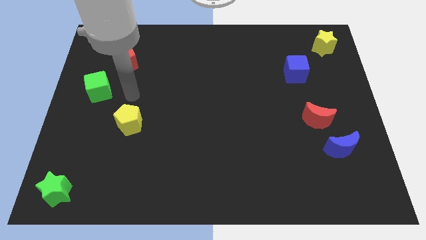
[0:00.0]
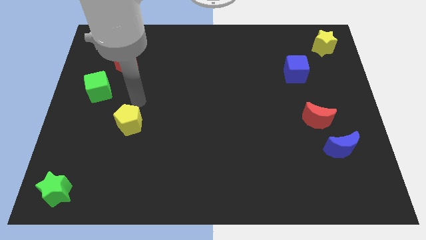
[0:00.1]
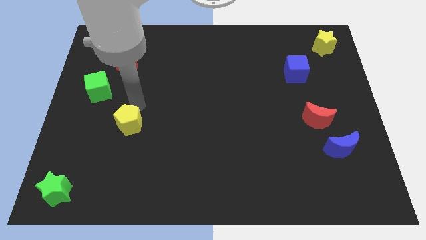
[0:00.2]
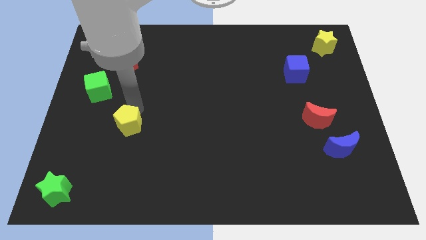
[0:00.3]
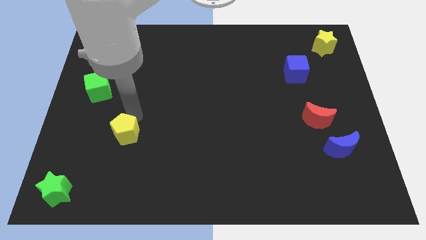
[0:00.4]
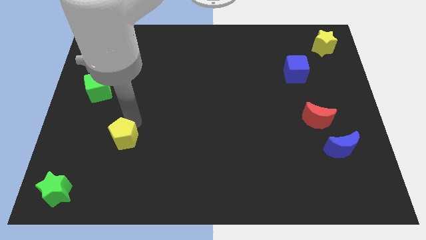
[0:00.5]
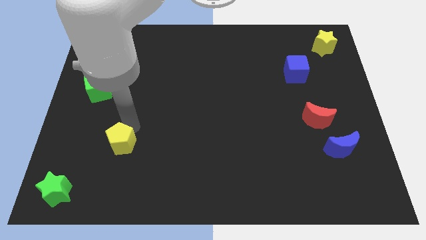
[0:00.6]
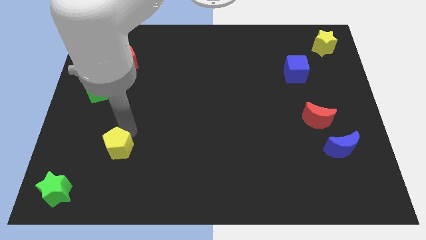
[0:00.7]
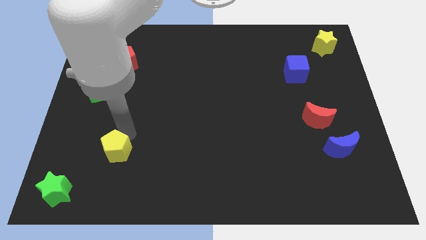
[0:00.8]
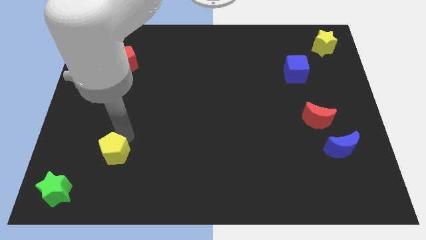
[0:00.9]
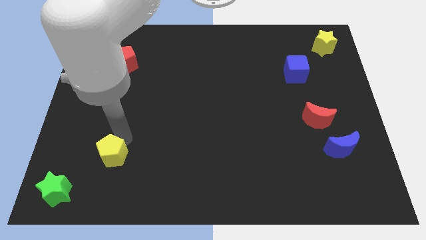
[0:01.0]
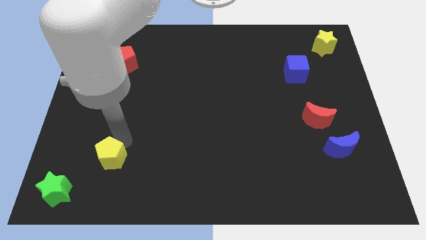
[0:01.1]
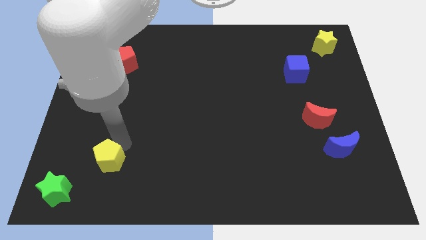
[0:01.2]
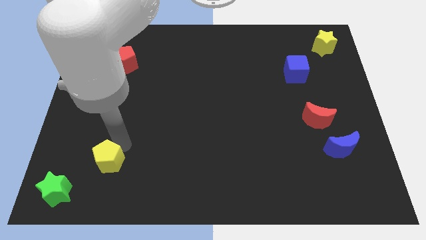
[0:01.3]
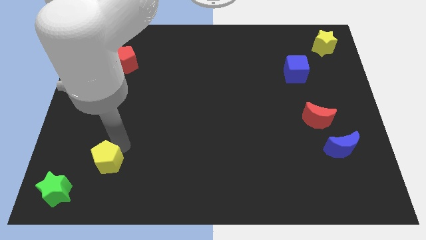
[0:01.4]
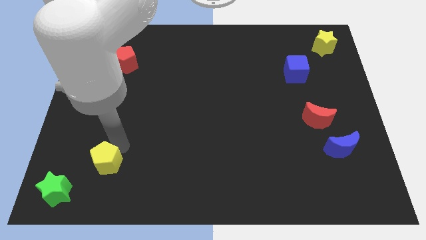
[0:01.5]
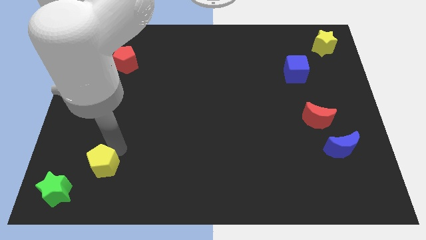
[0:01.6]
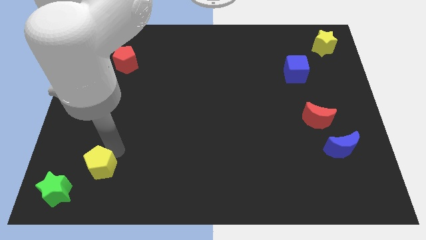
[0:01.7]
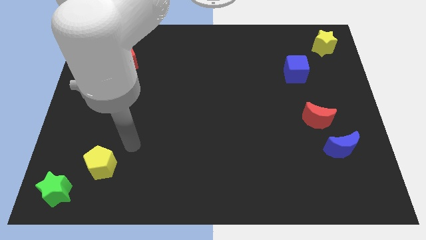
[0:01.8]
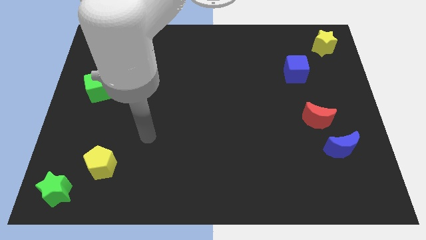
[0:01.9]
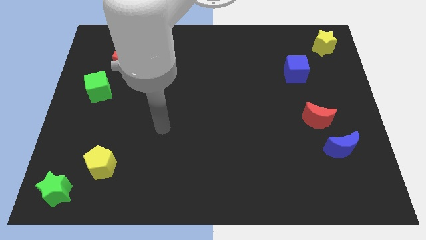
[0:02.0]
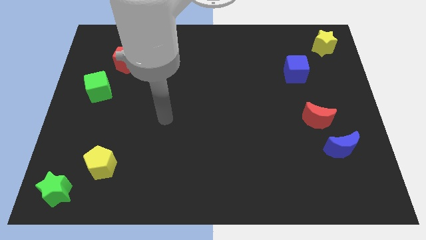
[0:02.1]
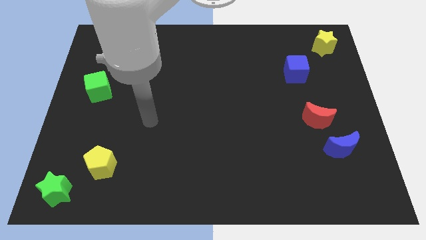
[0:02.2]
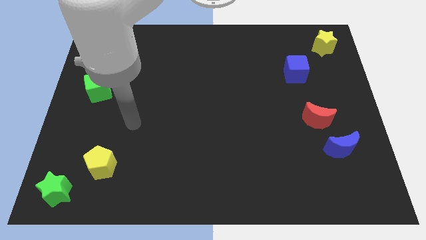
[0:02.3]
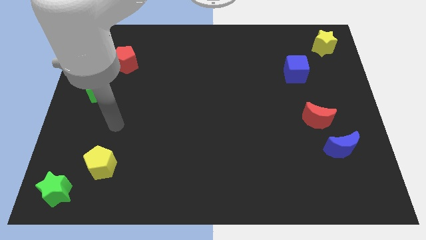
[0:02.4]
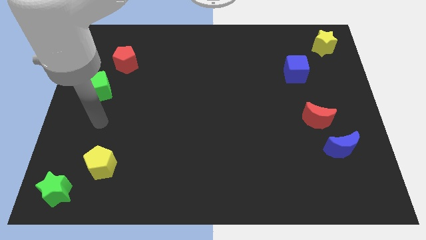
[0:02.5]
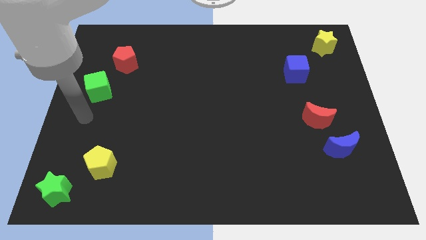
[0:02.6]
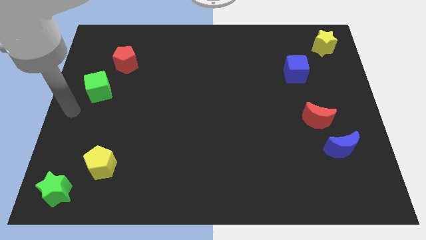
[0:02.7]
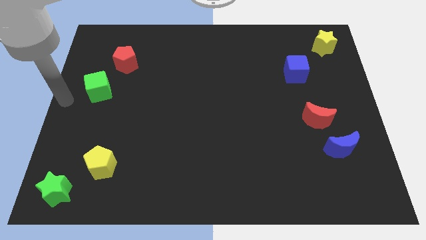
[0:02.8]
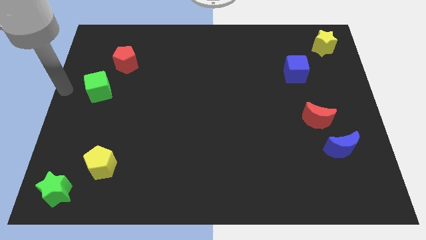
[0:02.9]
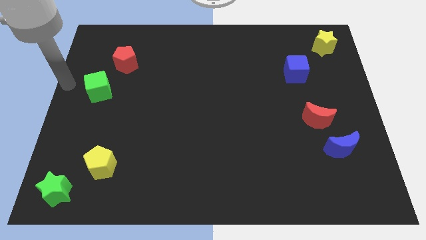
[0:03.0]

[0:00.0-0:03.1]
push the yellow pentagon towards the bottom left corner of the board

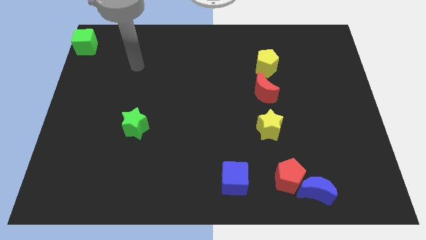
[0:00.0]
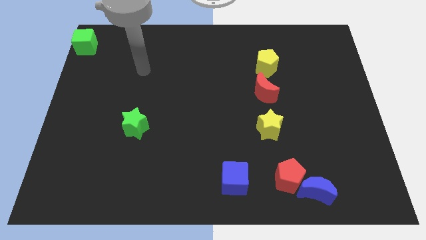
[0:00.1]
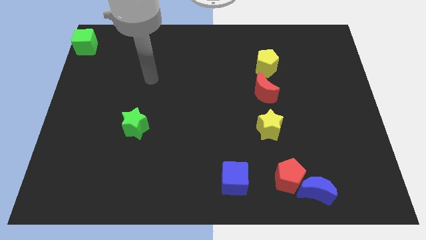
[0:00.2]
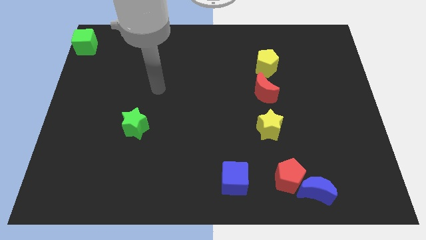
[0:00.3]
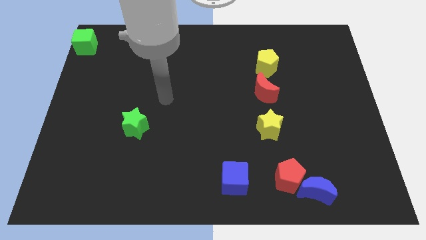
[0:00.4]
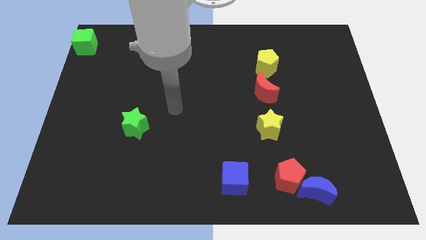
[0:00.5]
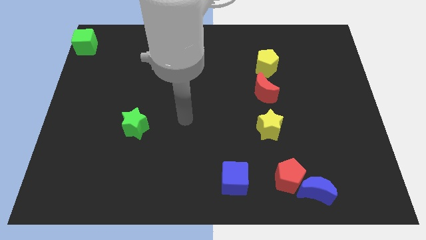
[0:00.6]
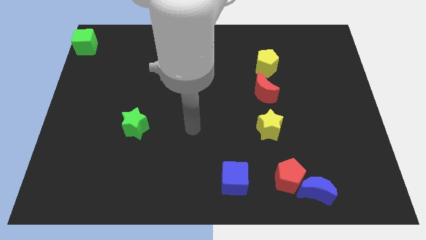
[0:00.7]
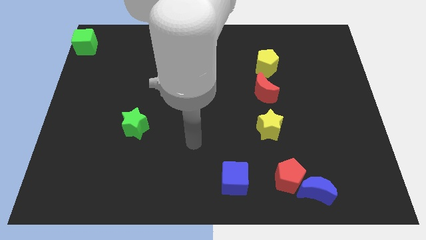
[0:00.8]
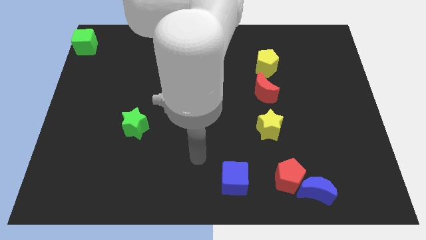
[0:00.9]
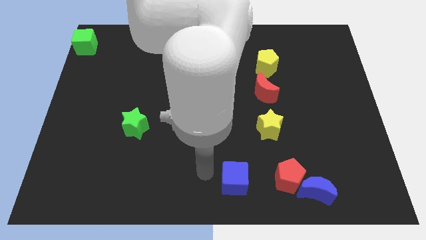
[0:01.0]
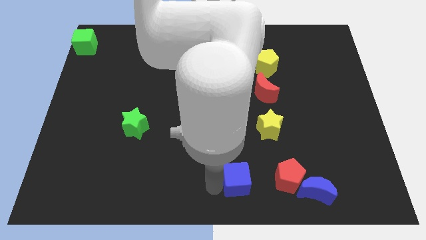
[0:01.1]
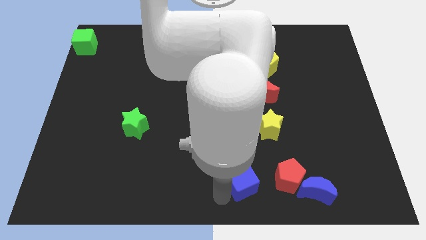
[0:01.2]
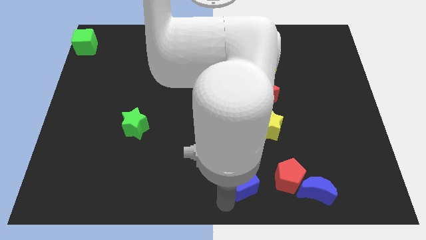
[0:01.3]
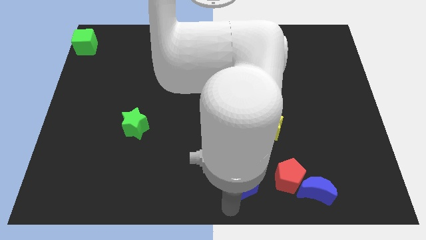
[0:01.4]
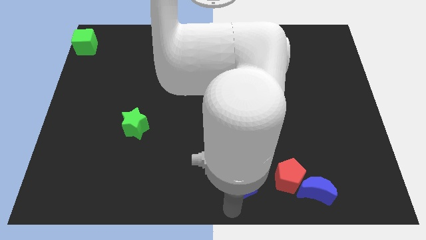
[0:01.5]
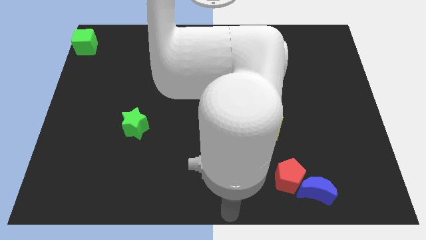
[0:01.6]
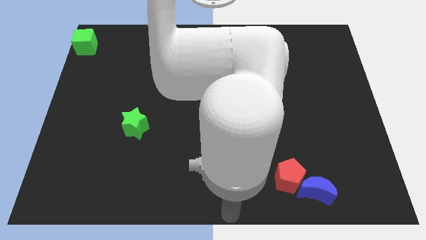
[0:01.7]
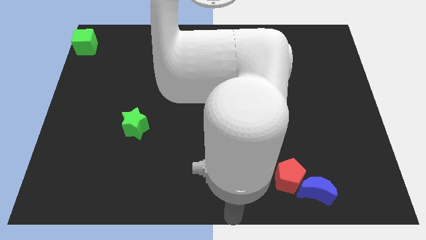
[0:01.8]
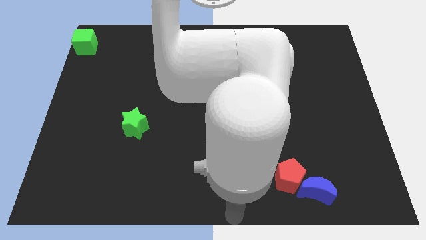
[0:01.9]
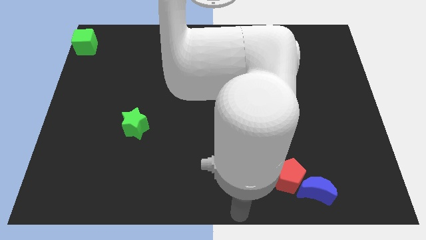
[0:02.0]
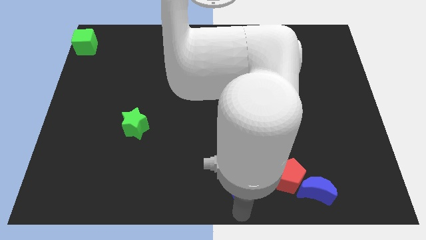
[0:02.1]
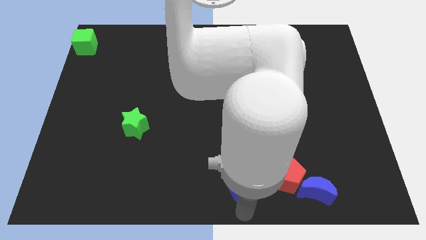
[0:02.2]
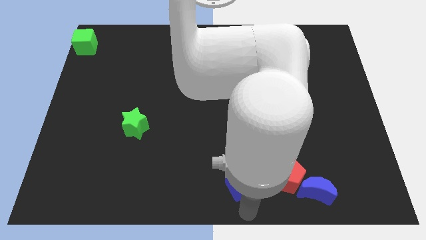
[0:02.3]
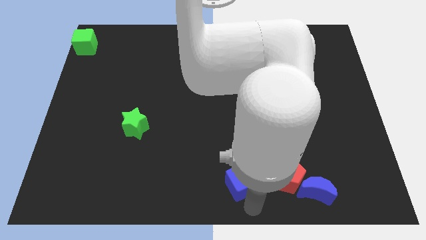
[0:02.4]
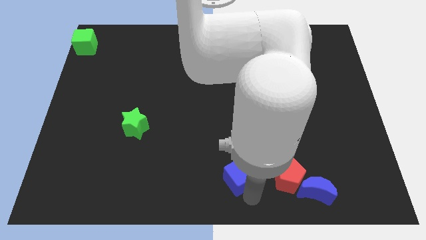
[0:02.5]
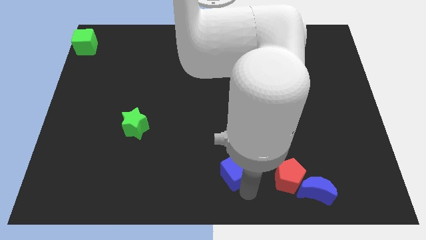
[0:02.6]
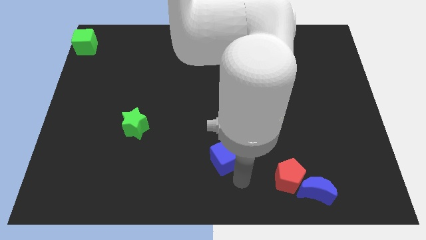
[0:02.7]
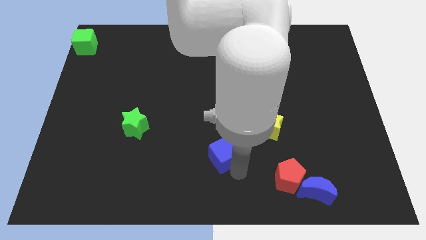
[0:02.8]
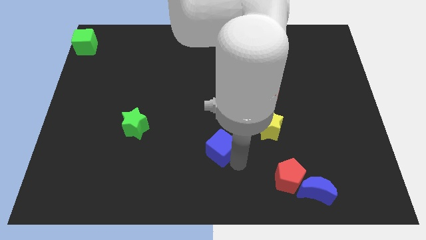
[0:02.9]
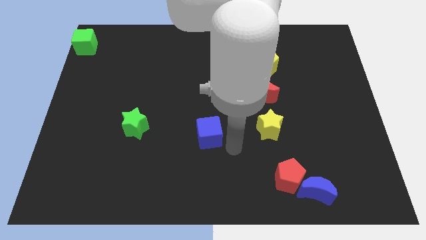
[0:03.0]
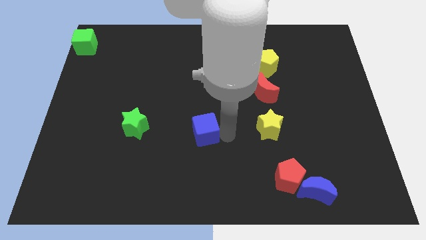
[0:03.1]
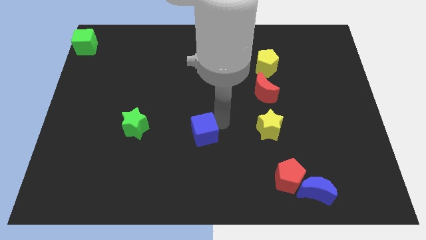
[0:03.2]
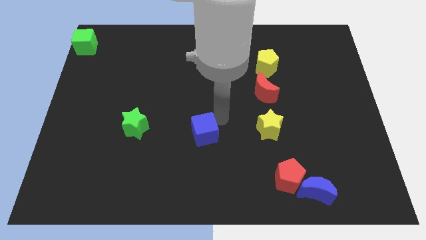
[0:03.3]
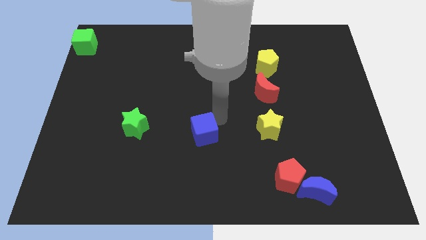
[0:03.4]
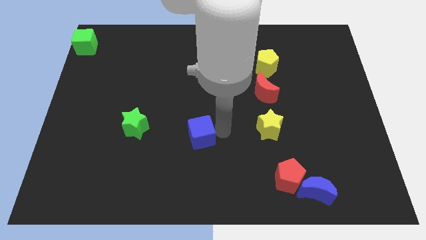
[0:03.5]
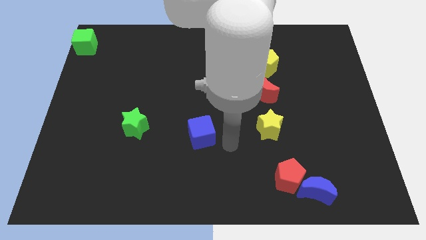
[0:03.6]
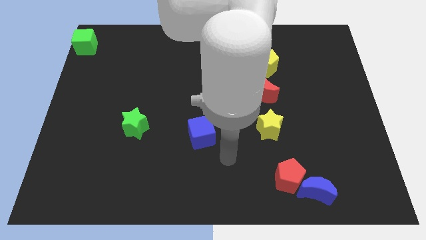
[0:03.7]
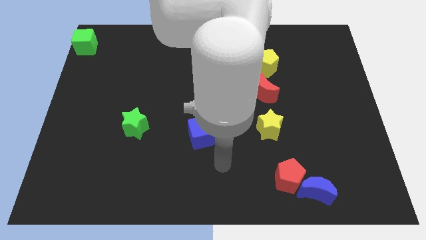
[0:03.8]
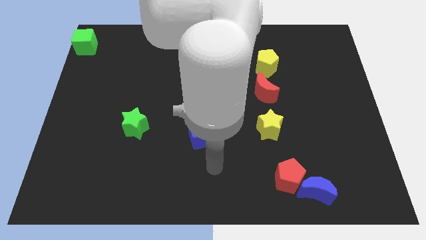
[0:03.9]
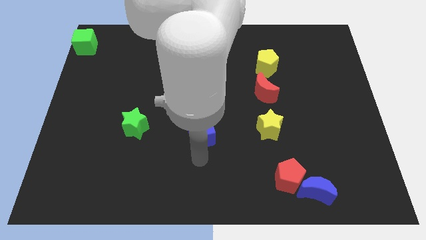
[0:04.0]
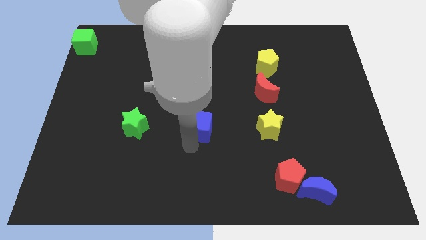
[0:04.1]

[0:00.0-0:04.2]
place the blue cube in between the yellow star and green star

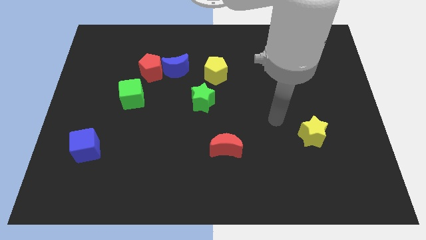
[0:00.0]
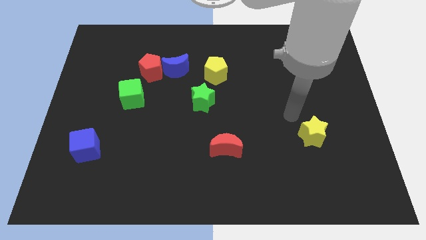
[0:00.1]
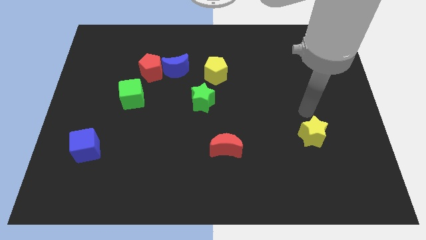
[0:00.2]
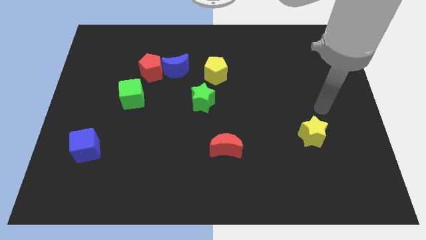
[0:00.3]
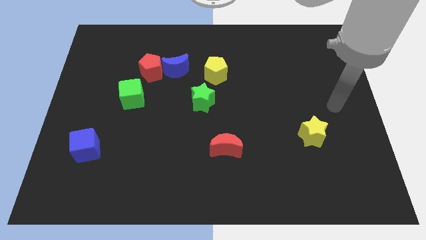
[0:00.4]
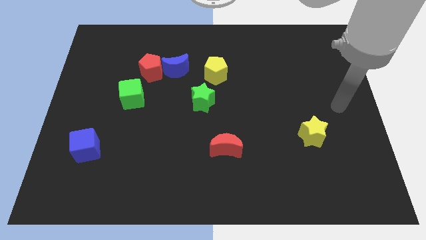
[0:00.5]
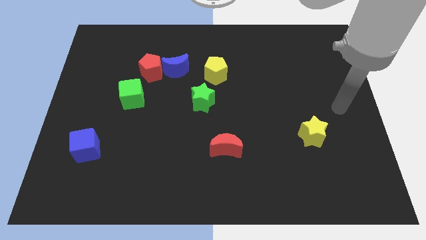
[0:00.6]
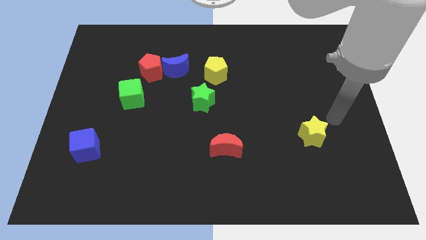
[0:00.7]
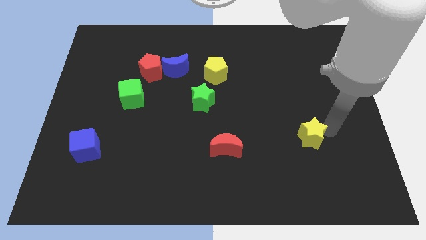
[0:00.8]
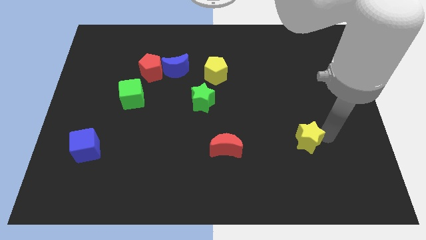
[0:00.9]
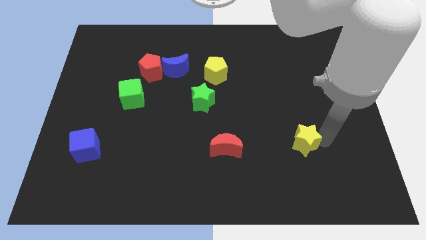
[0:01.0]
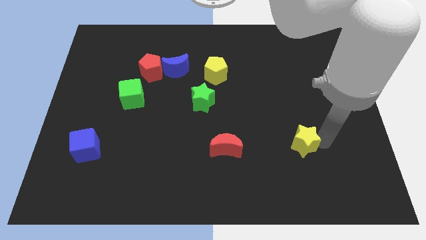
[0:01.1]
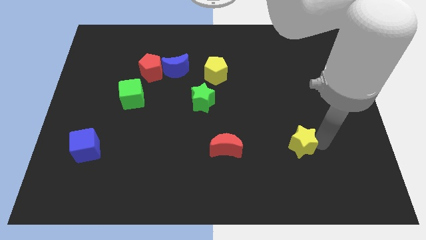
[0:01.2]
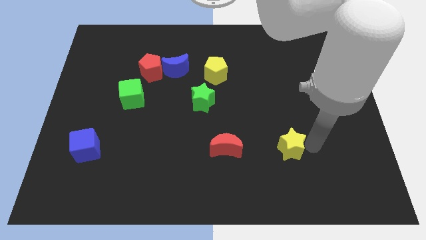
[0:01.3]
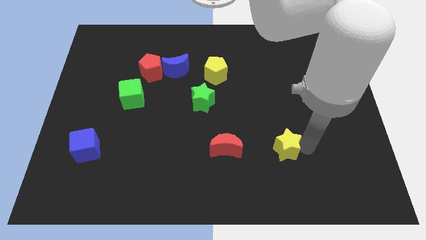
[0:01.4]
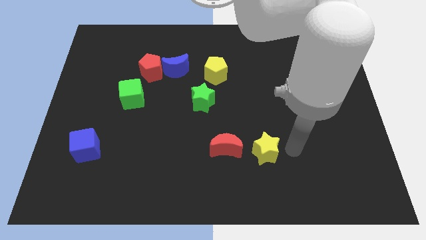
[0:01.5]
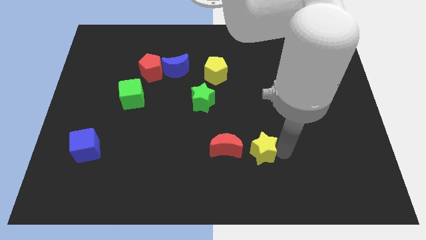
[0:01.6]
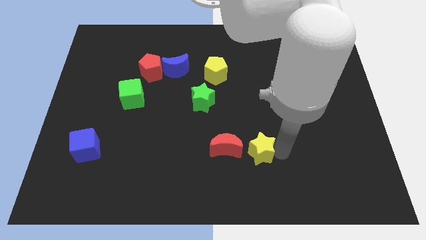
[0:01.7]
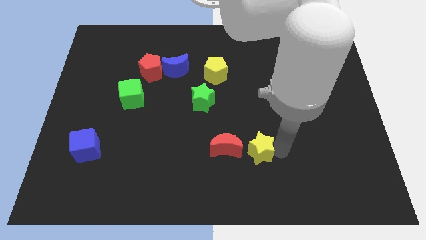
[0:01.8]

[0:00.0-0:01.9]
put the yellow star to the right side of the red moon
